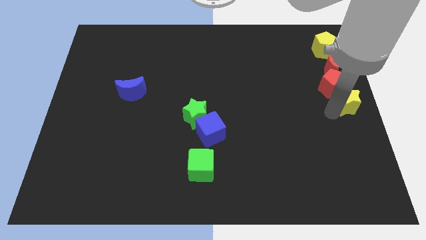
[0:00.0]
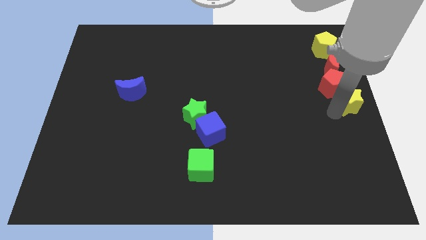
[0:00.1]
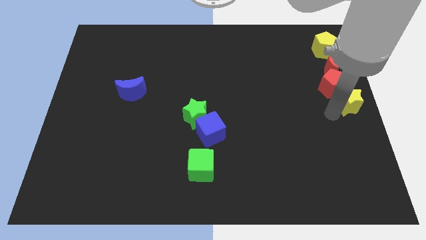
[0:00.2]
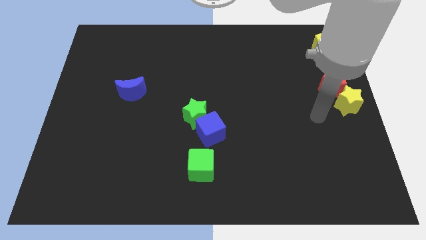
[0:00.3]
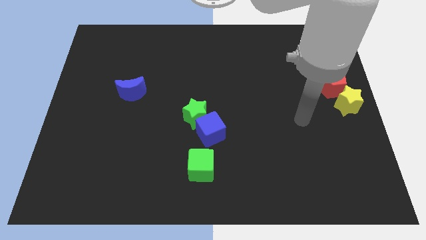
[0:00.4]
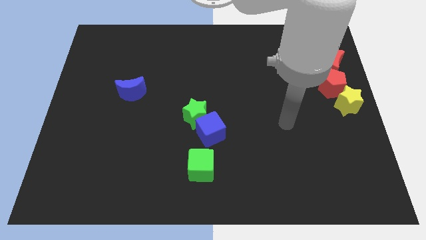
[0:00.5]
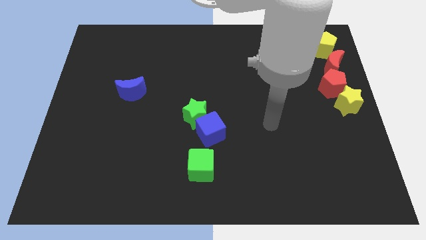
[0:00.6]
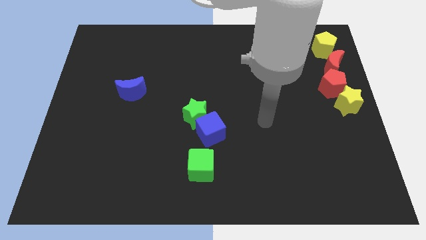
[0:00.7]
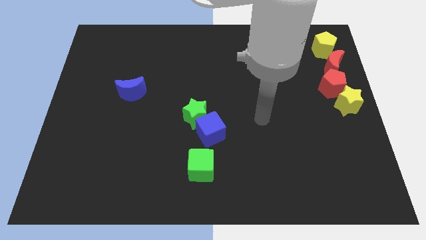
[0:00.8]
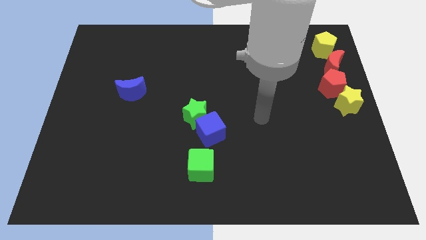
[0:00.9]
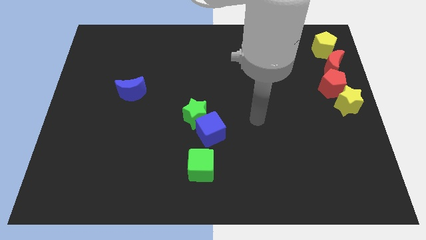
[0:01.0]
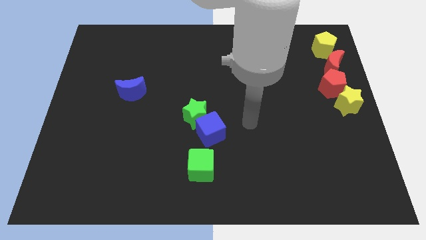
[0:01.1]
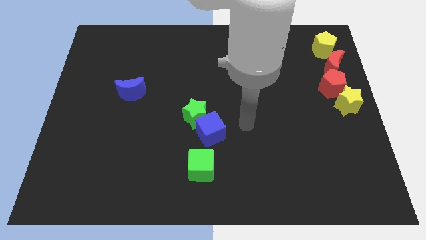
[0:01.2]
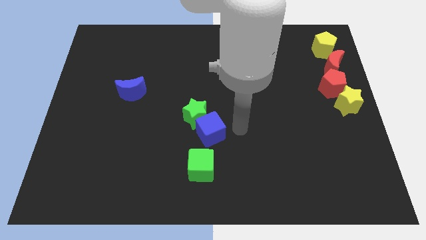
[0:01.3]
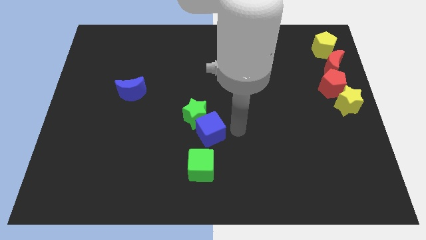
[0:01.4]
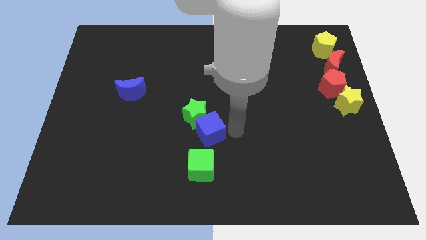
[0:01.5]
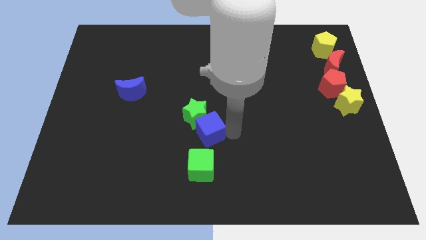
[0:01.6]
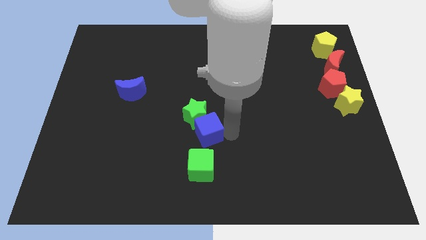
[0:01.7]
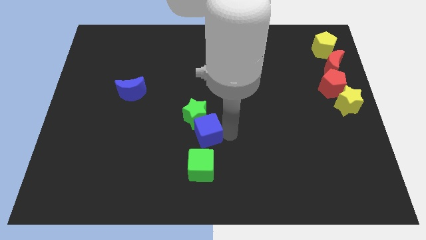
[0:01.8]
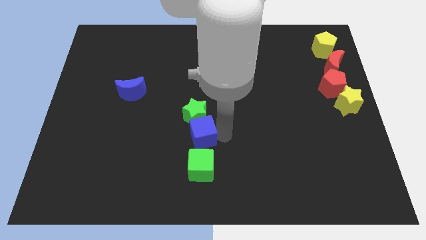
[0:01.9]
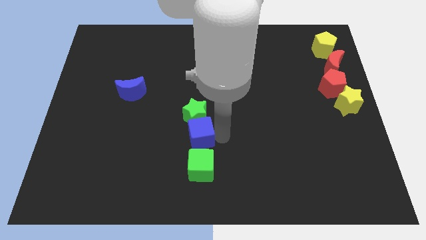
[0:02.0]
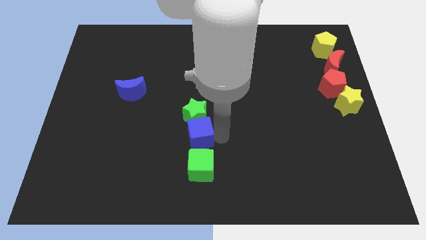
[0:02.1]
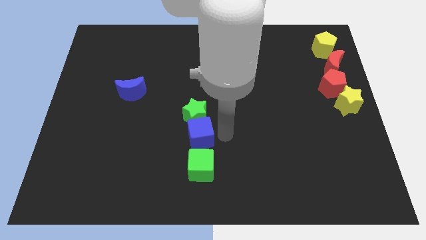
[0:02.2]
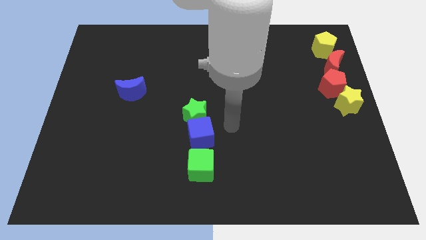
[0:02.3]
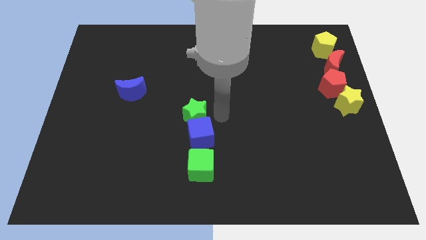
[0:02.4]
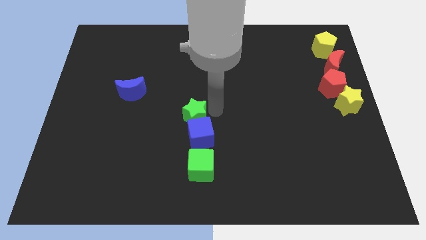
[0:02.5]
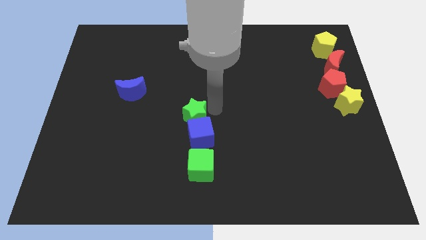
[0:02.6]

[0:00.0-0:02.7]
move your arm right to the green star

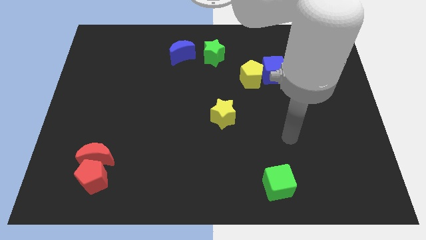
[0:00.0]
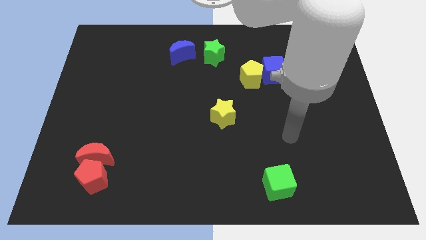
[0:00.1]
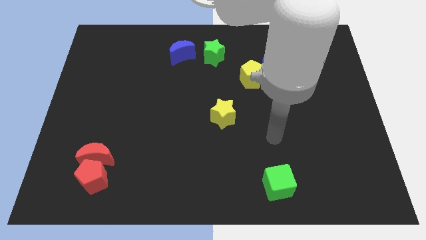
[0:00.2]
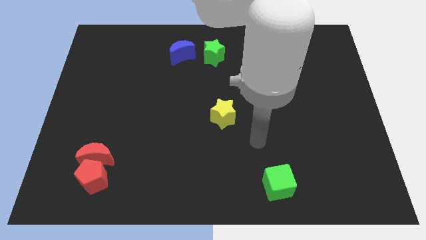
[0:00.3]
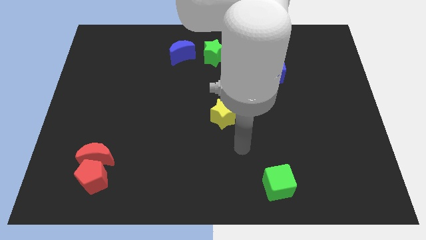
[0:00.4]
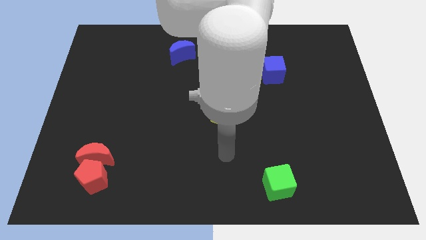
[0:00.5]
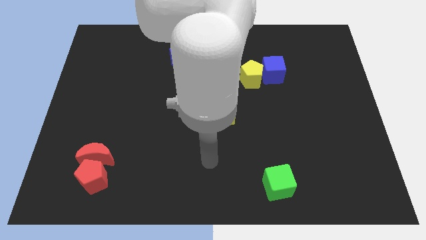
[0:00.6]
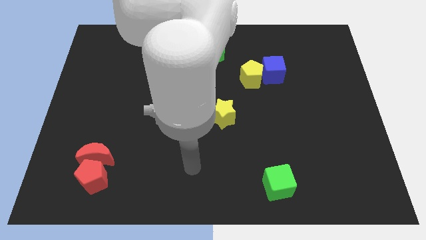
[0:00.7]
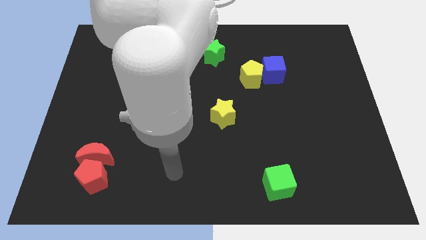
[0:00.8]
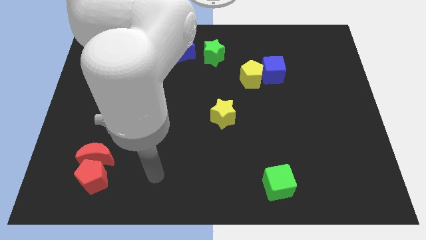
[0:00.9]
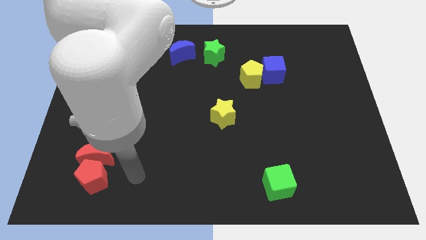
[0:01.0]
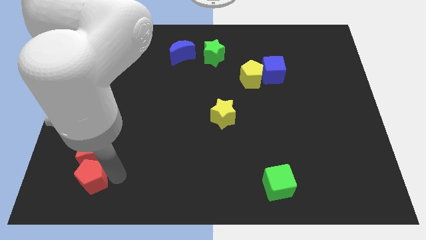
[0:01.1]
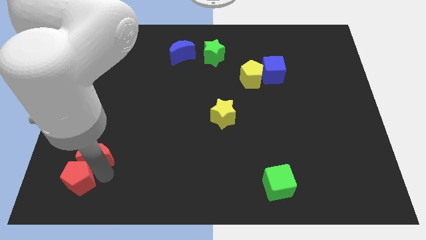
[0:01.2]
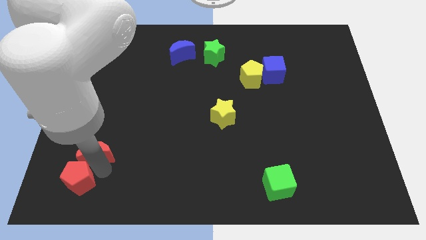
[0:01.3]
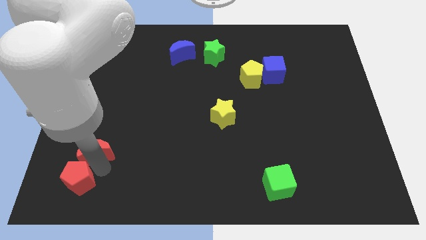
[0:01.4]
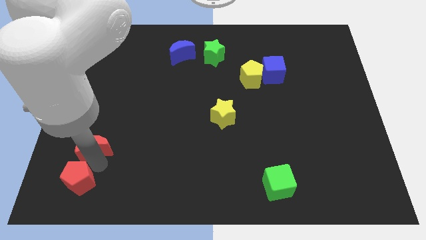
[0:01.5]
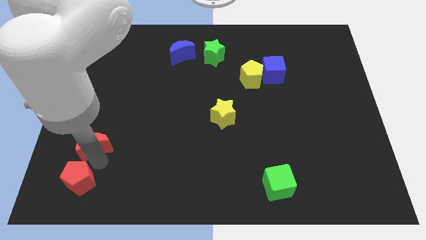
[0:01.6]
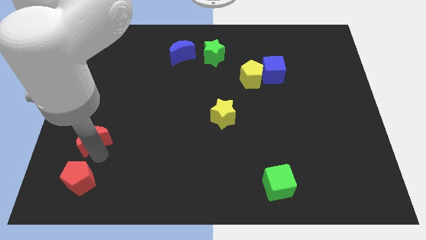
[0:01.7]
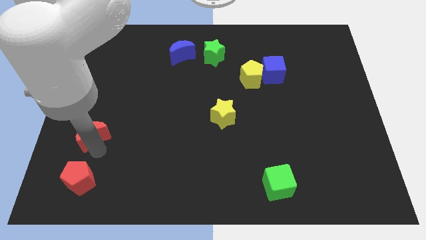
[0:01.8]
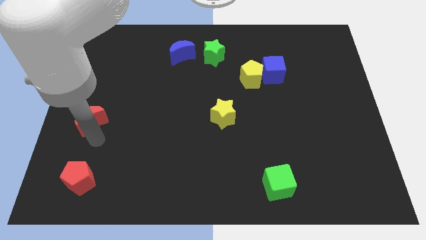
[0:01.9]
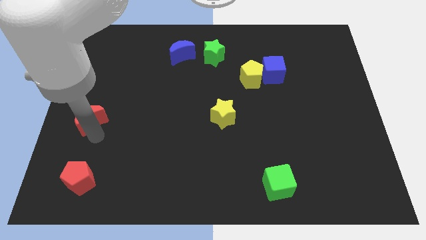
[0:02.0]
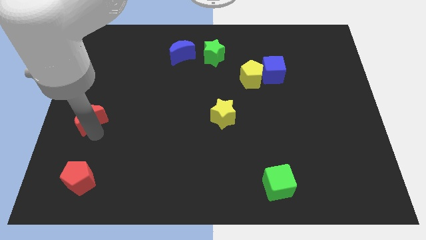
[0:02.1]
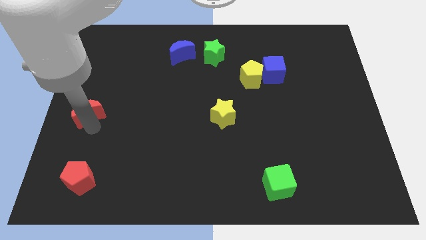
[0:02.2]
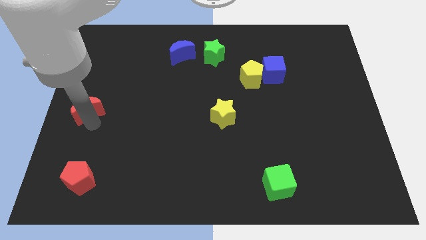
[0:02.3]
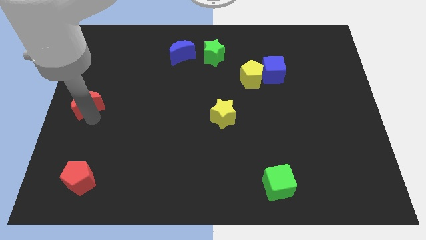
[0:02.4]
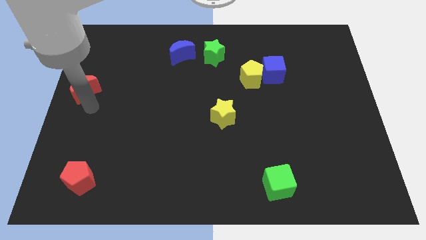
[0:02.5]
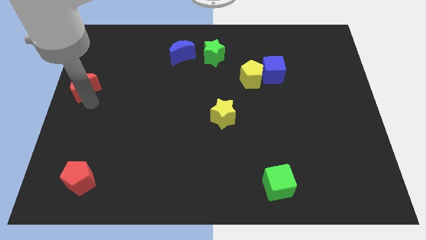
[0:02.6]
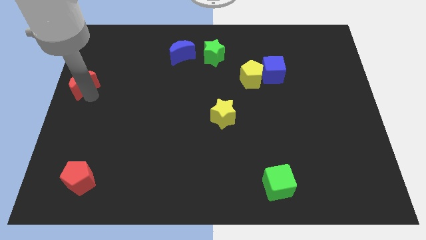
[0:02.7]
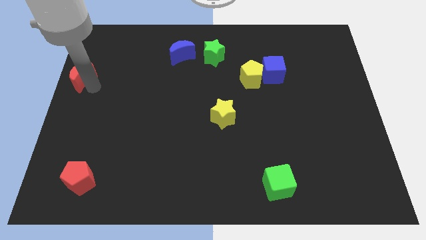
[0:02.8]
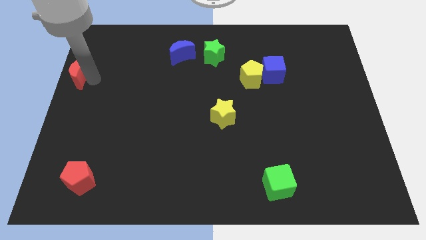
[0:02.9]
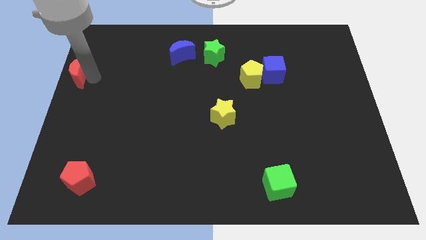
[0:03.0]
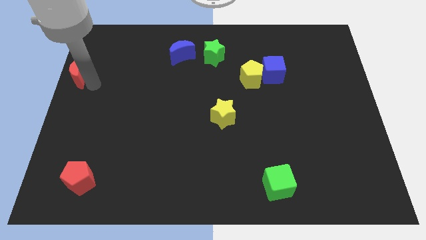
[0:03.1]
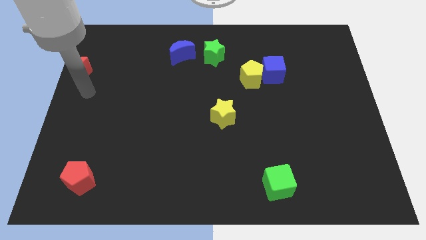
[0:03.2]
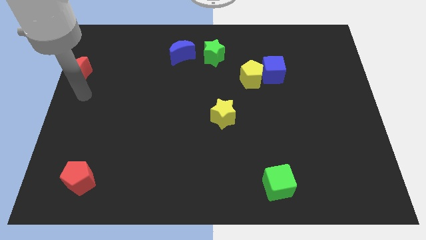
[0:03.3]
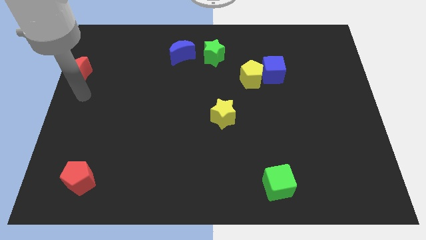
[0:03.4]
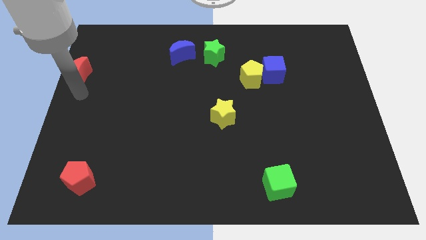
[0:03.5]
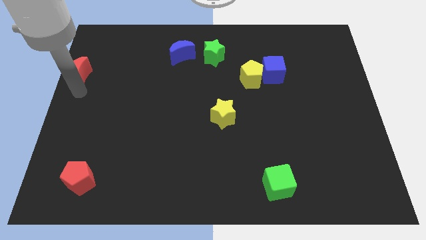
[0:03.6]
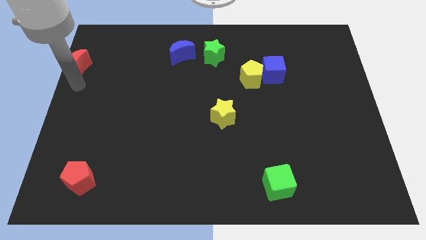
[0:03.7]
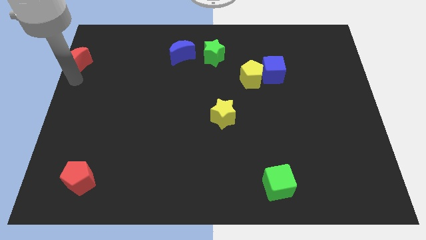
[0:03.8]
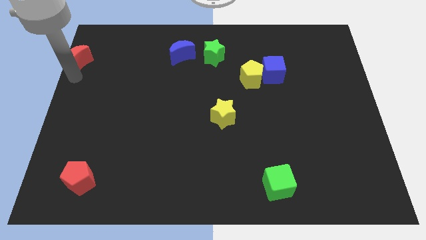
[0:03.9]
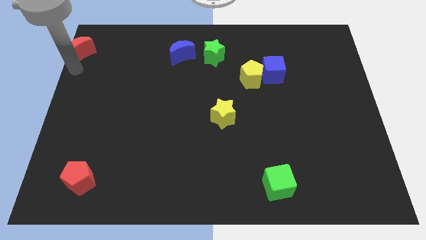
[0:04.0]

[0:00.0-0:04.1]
push the red crescent to the left of the blue crescent

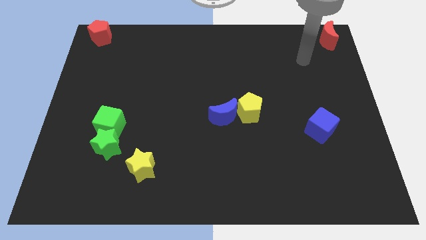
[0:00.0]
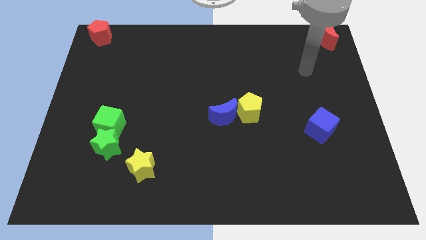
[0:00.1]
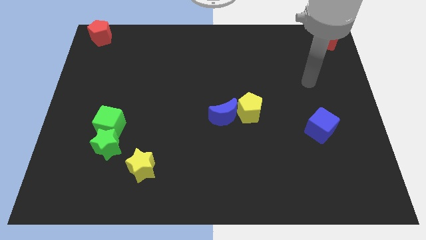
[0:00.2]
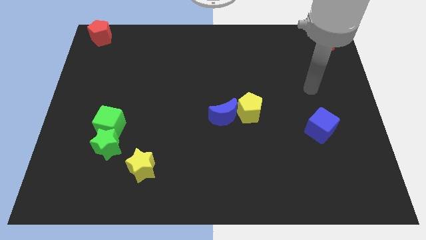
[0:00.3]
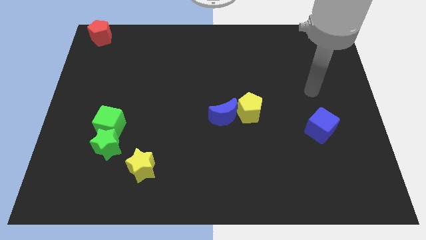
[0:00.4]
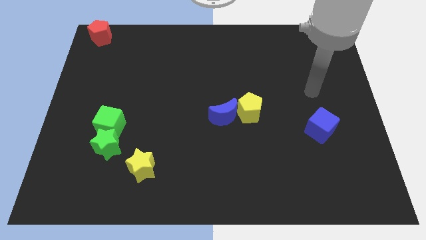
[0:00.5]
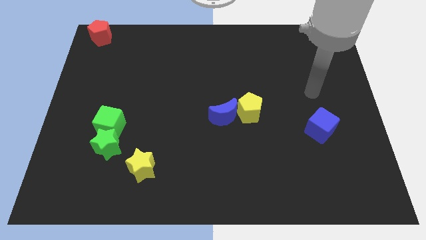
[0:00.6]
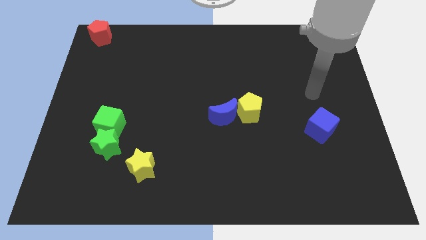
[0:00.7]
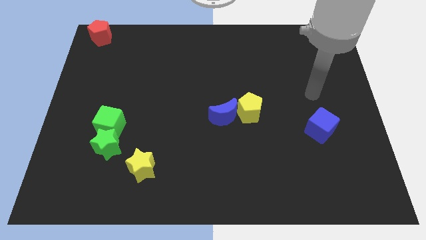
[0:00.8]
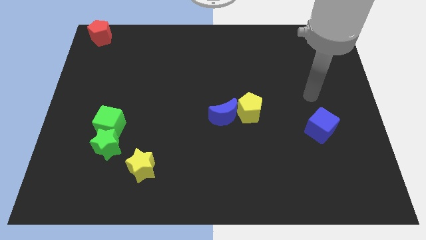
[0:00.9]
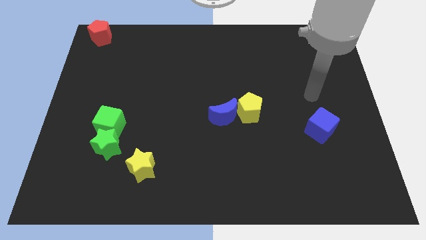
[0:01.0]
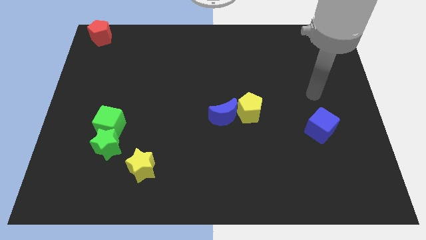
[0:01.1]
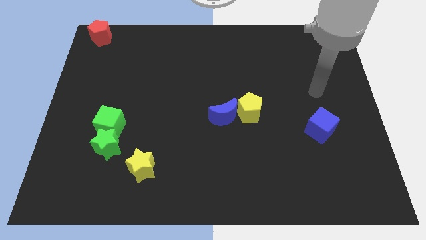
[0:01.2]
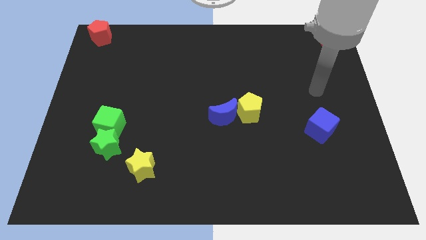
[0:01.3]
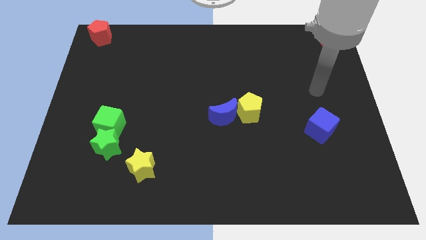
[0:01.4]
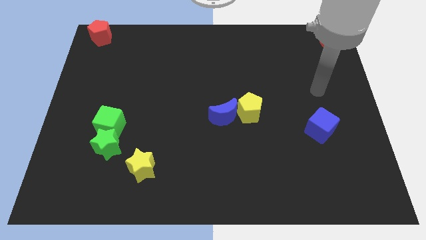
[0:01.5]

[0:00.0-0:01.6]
point your arm at the top of the blue cube

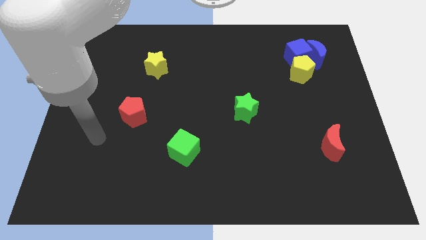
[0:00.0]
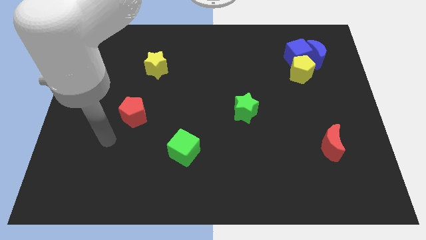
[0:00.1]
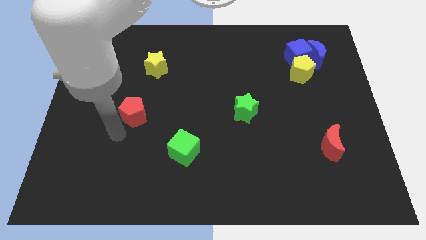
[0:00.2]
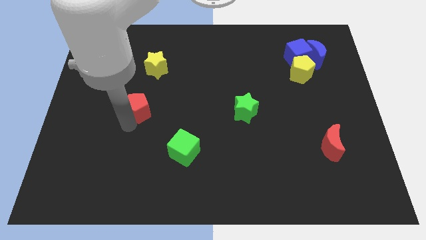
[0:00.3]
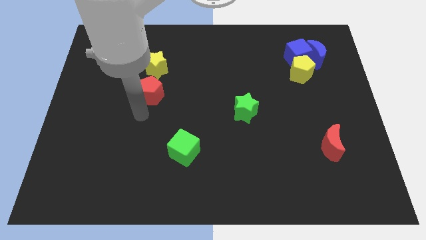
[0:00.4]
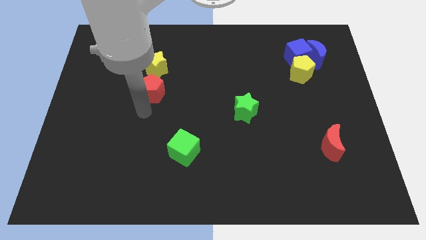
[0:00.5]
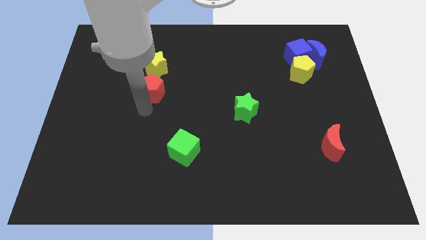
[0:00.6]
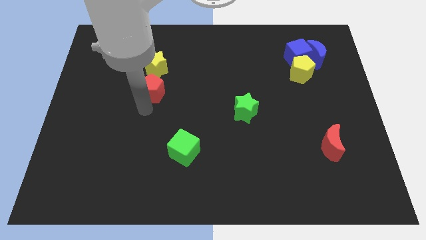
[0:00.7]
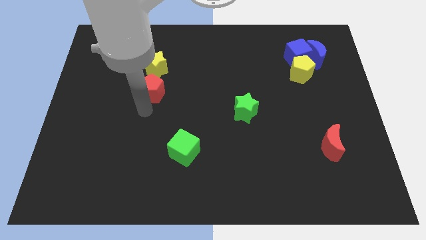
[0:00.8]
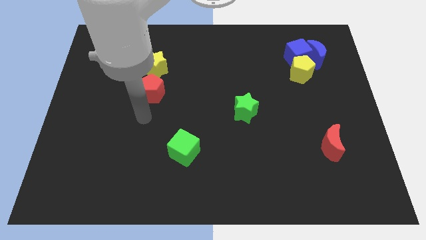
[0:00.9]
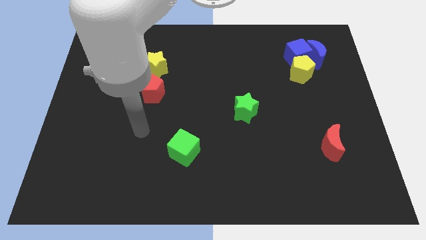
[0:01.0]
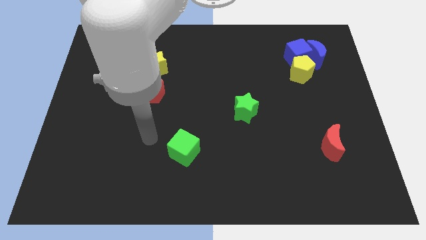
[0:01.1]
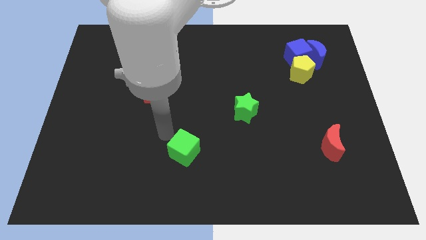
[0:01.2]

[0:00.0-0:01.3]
place the red pentagon below the yellow star
